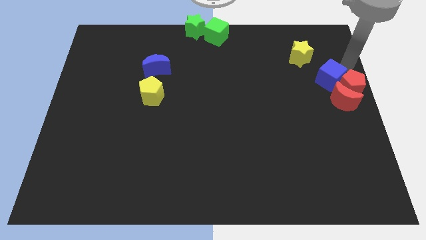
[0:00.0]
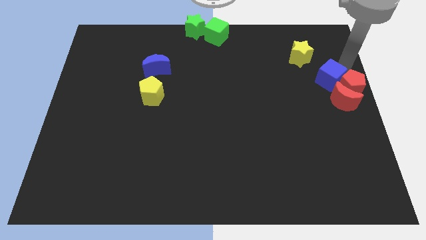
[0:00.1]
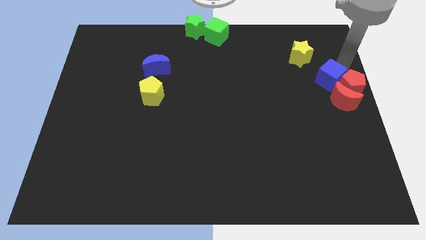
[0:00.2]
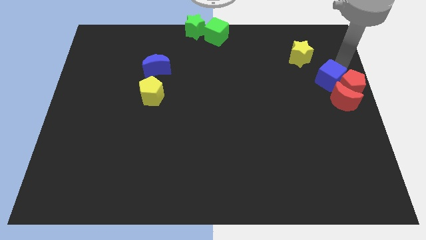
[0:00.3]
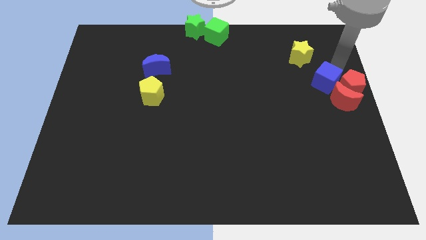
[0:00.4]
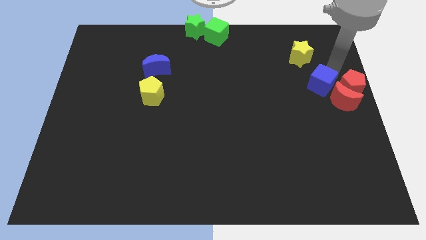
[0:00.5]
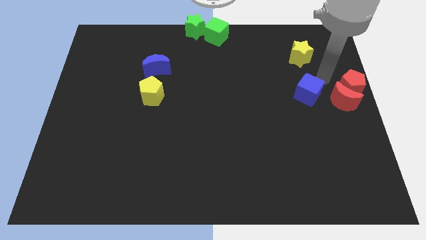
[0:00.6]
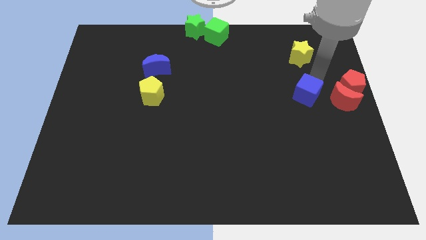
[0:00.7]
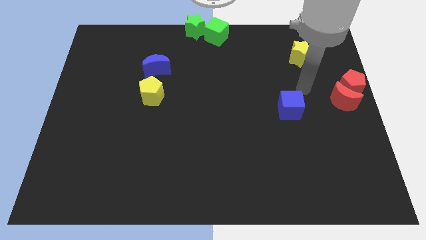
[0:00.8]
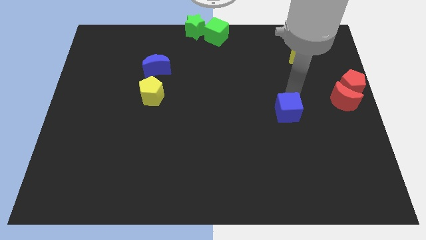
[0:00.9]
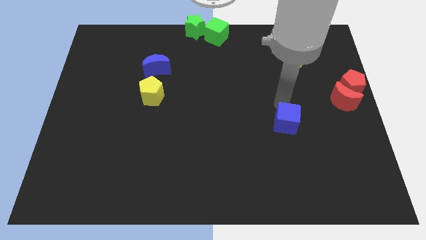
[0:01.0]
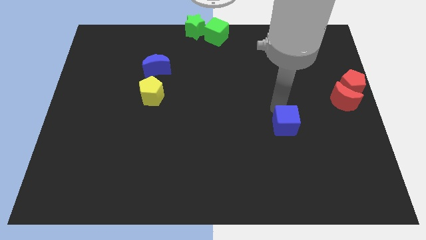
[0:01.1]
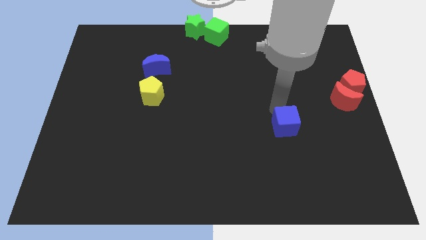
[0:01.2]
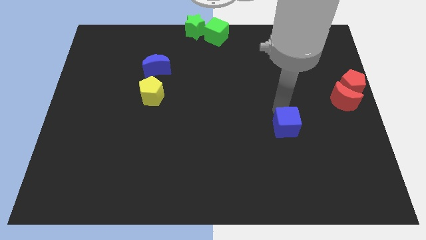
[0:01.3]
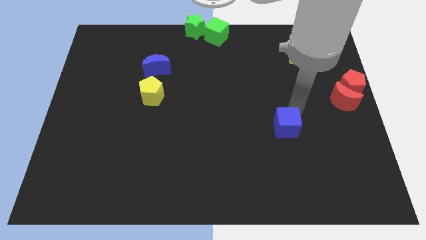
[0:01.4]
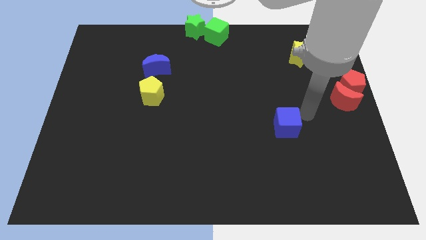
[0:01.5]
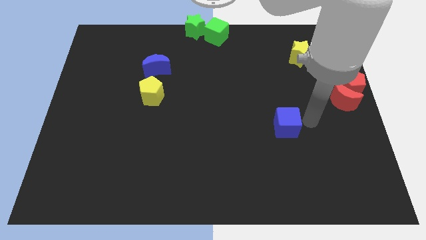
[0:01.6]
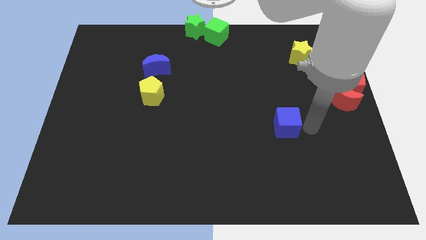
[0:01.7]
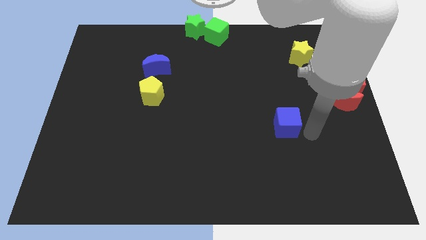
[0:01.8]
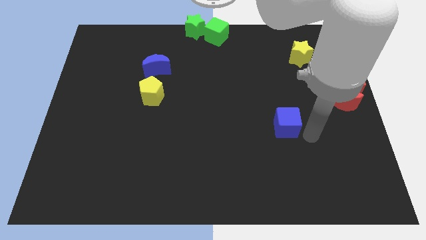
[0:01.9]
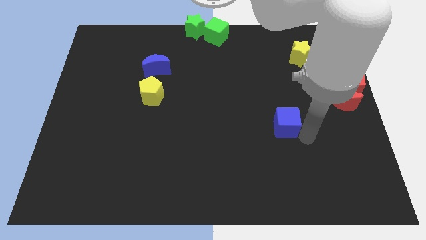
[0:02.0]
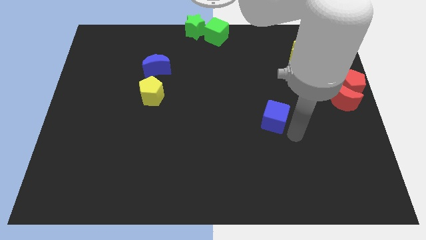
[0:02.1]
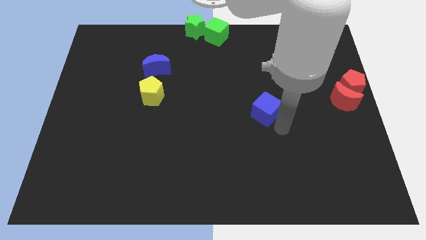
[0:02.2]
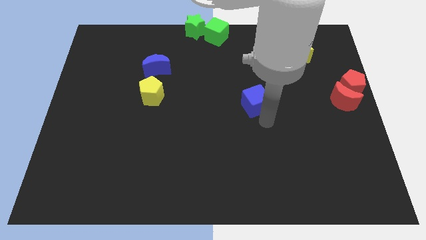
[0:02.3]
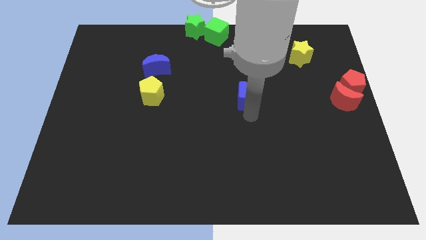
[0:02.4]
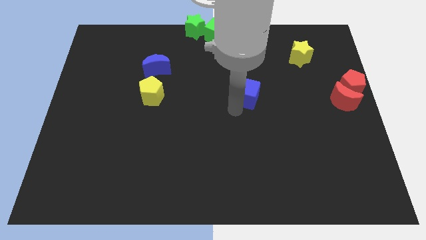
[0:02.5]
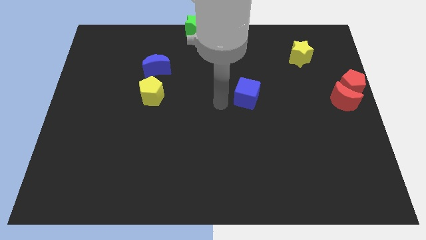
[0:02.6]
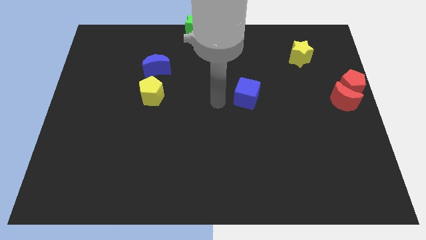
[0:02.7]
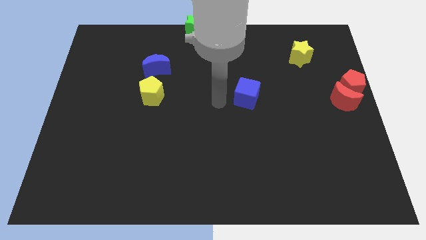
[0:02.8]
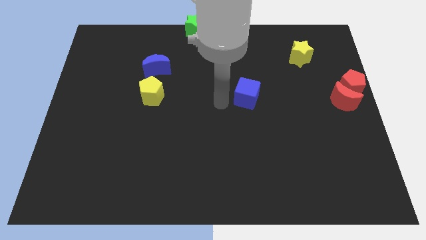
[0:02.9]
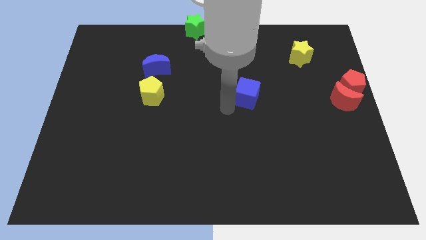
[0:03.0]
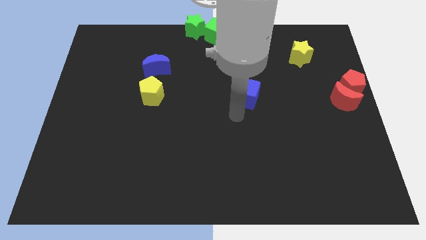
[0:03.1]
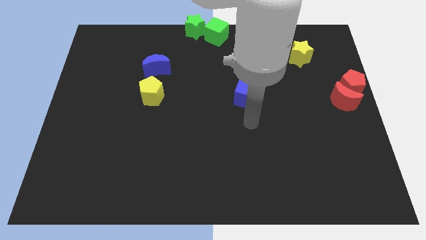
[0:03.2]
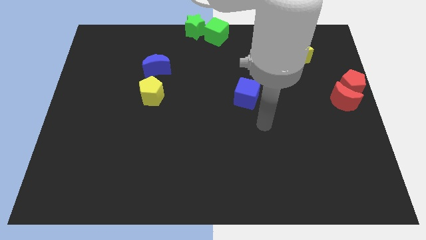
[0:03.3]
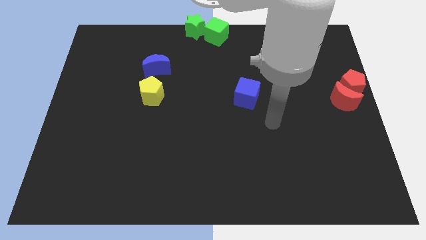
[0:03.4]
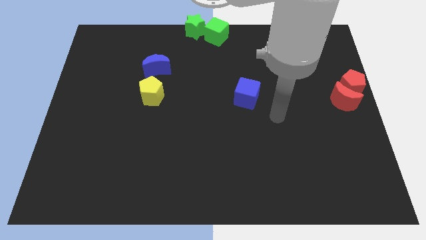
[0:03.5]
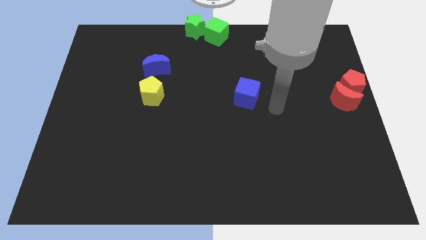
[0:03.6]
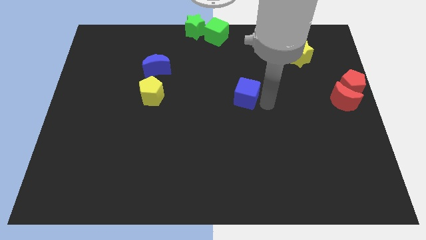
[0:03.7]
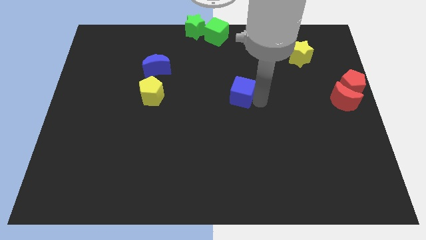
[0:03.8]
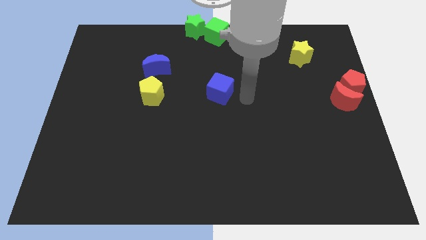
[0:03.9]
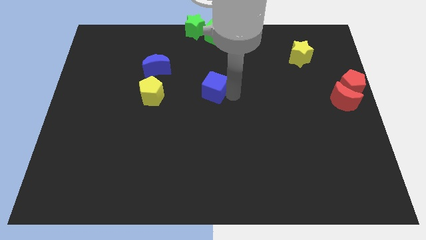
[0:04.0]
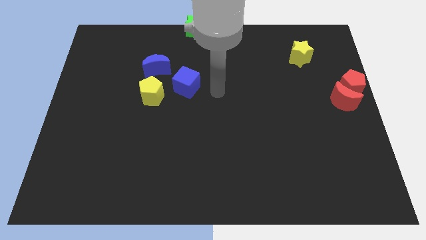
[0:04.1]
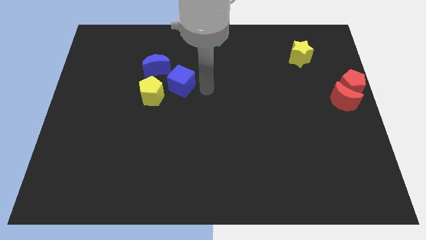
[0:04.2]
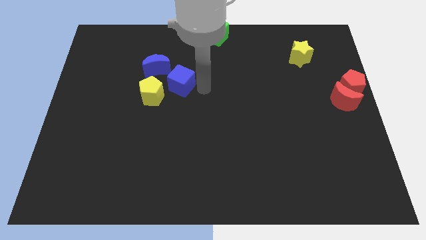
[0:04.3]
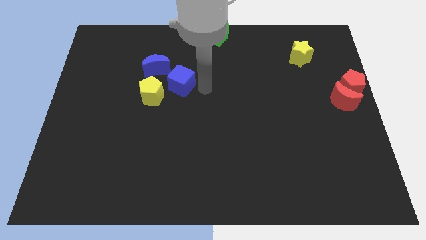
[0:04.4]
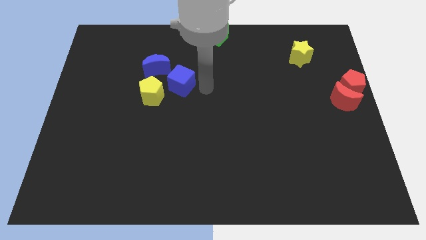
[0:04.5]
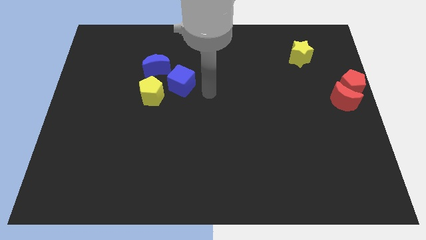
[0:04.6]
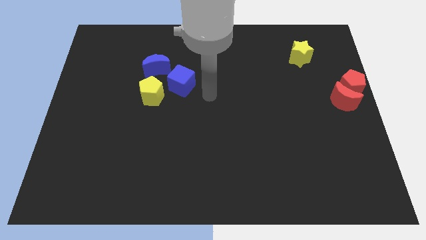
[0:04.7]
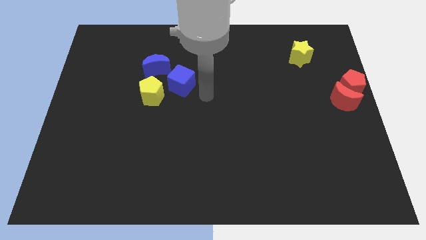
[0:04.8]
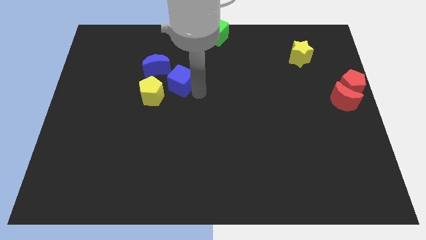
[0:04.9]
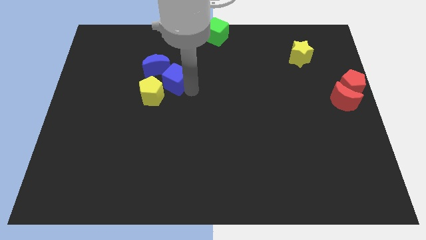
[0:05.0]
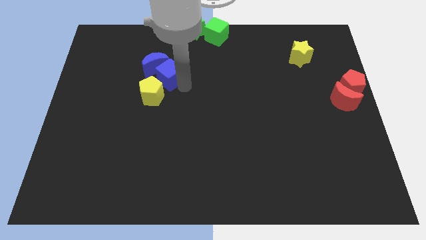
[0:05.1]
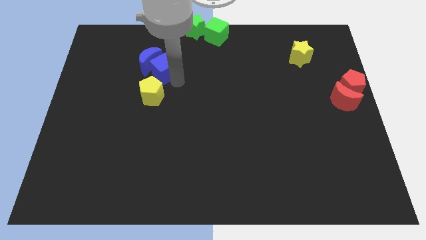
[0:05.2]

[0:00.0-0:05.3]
push the blue cube into the blue crescent

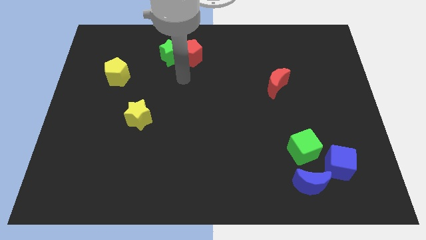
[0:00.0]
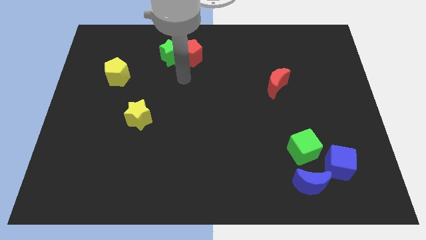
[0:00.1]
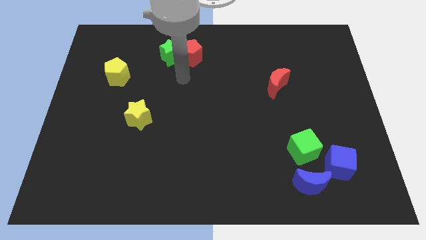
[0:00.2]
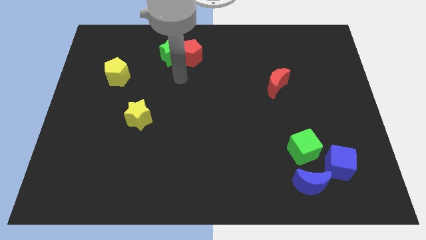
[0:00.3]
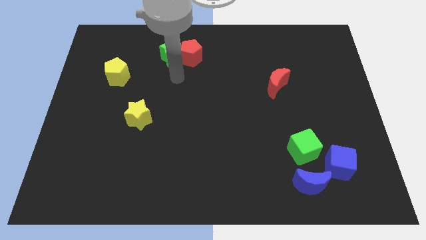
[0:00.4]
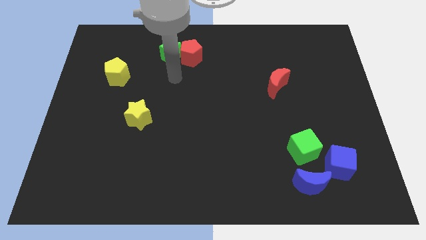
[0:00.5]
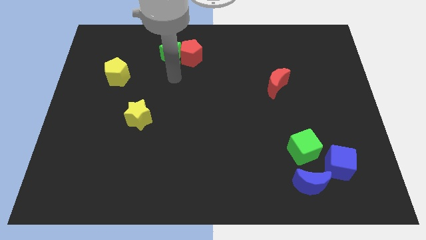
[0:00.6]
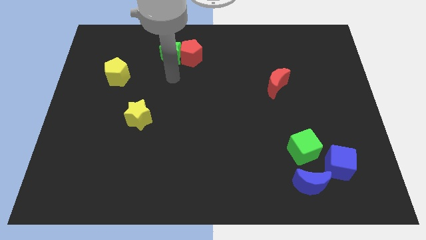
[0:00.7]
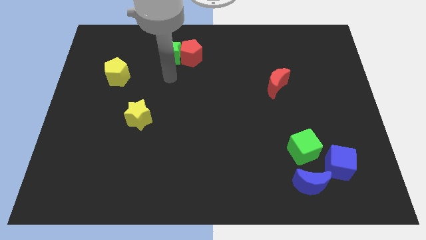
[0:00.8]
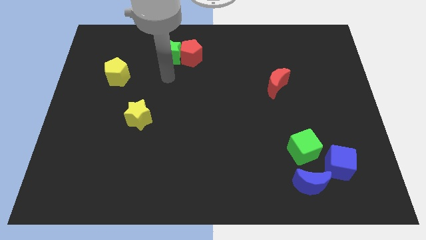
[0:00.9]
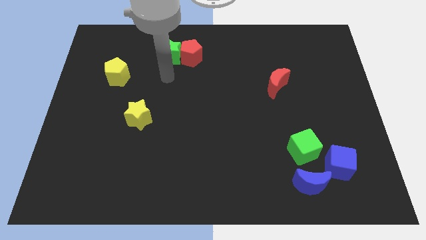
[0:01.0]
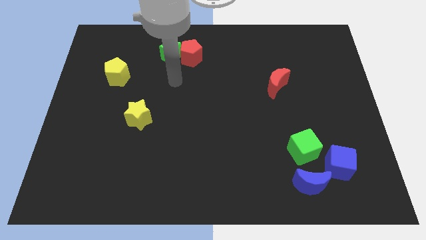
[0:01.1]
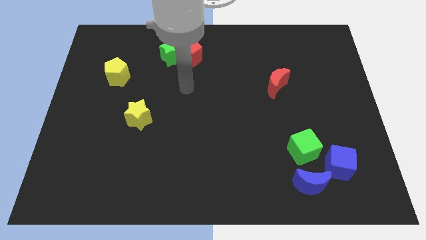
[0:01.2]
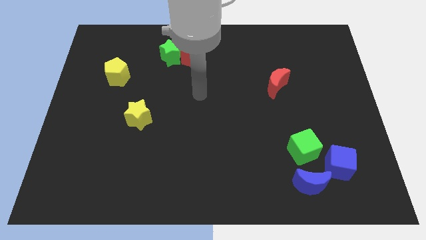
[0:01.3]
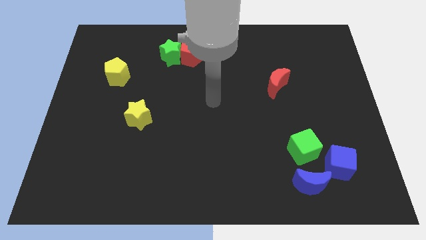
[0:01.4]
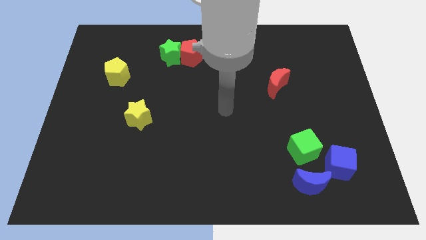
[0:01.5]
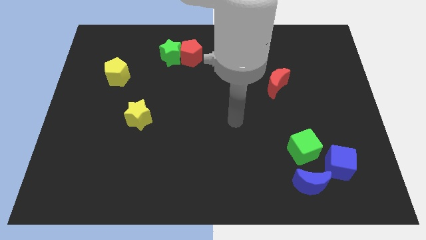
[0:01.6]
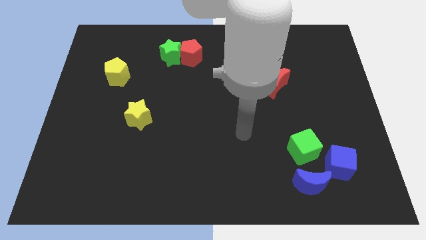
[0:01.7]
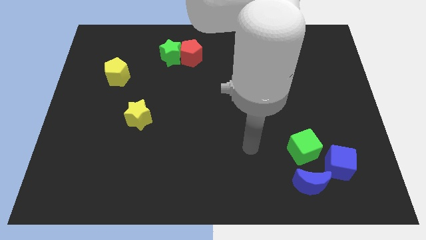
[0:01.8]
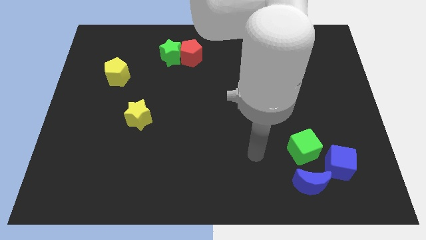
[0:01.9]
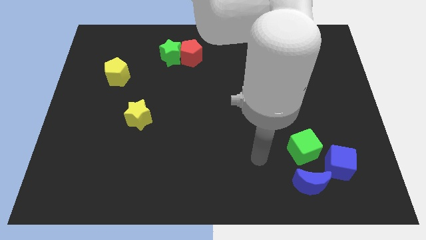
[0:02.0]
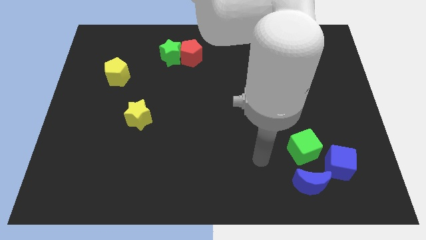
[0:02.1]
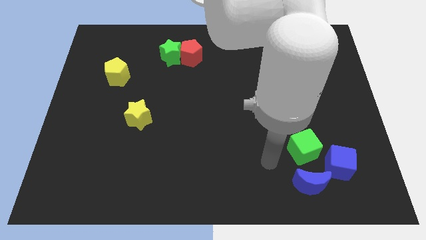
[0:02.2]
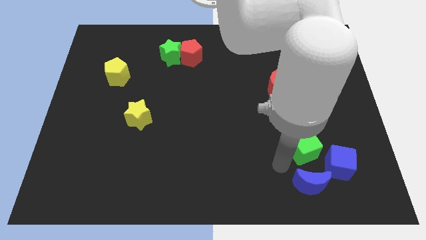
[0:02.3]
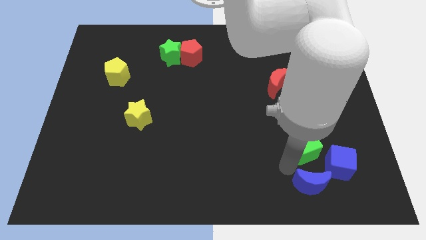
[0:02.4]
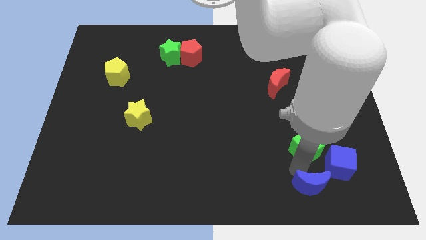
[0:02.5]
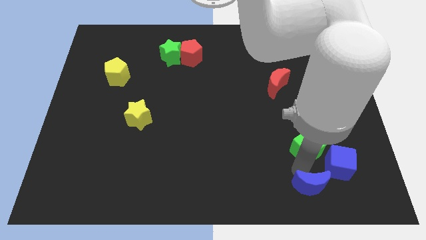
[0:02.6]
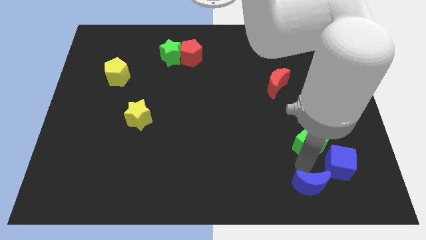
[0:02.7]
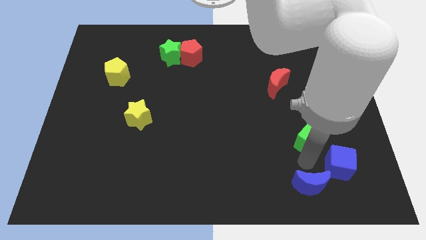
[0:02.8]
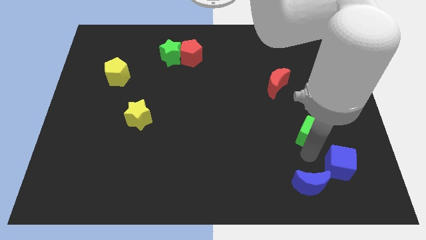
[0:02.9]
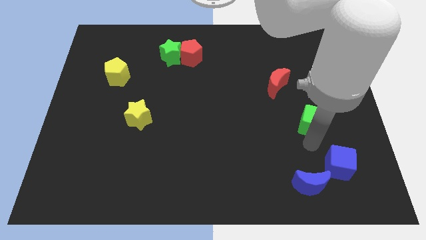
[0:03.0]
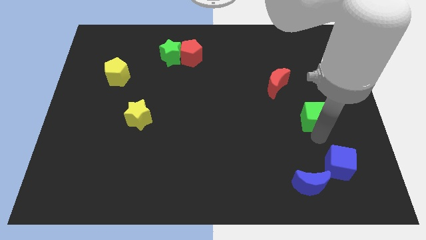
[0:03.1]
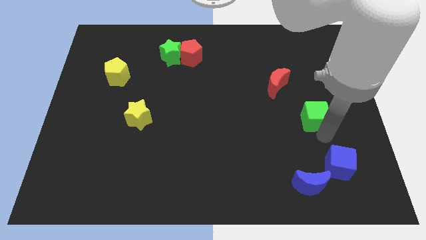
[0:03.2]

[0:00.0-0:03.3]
separate the green cube from the blue cube

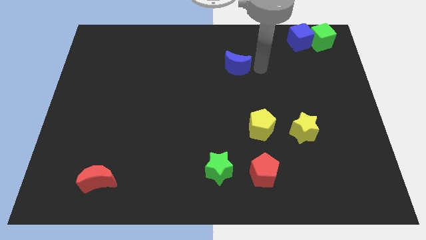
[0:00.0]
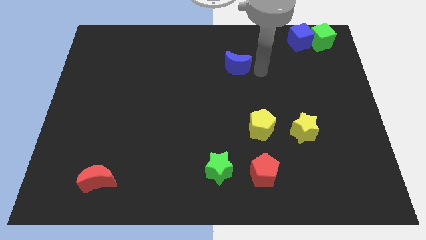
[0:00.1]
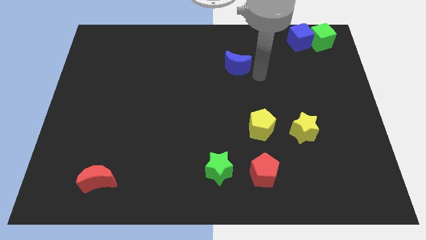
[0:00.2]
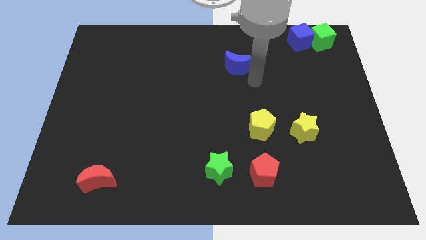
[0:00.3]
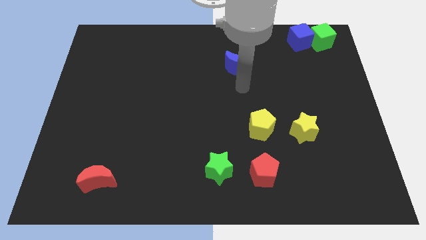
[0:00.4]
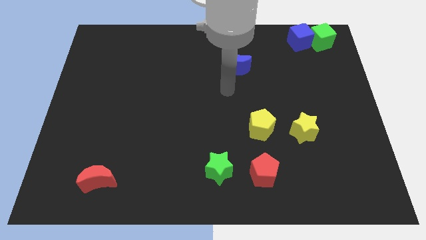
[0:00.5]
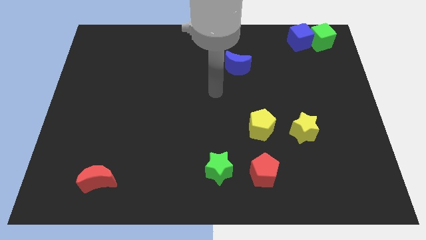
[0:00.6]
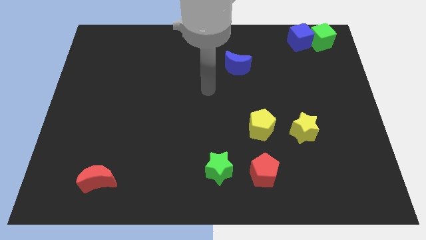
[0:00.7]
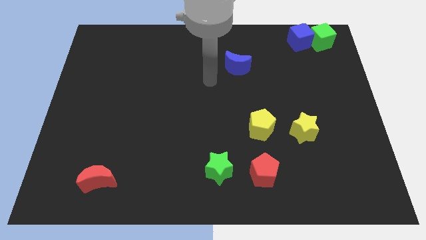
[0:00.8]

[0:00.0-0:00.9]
move the arm below to the blue crescent
